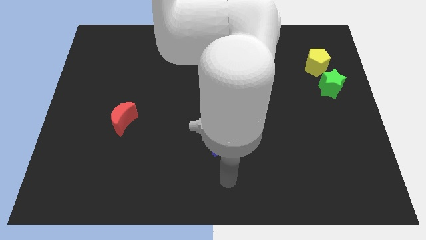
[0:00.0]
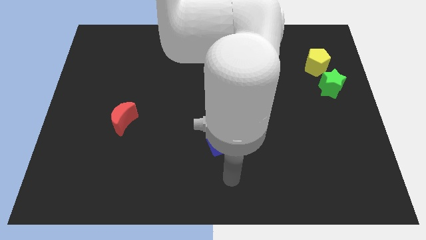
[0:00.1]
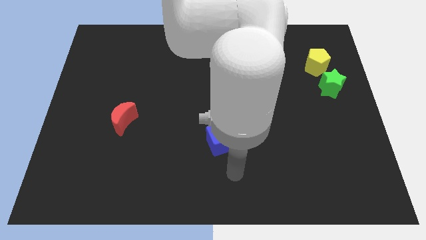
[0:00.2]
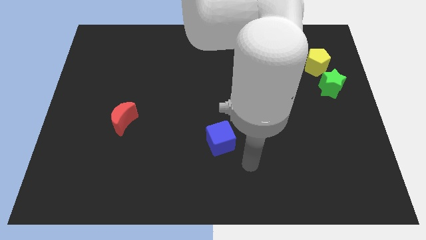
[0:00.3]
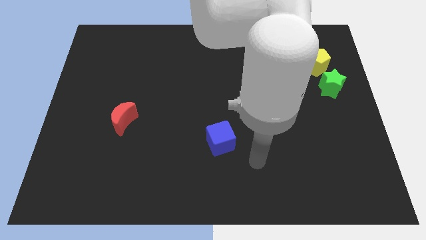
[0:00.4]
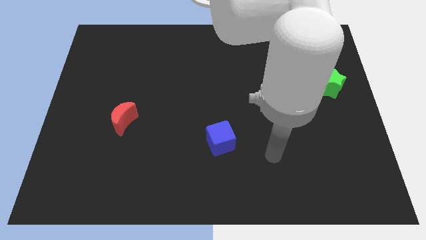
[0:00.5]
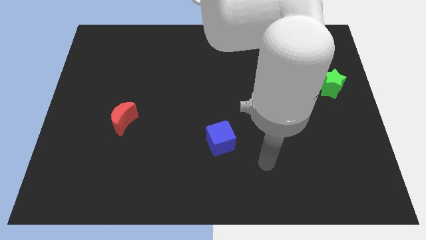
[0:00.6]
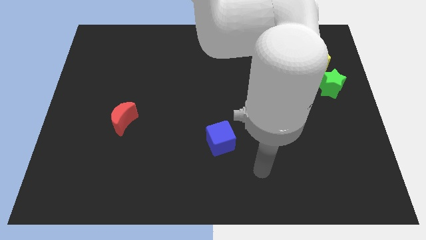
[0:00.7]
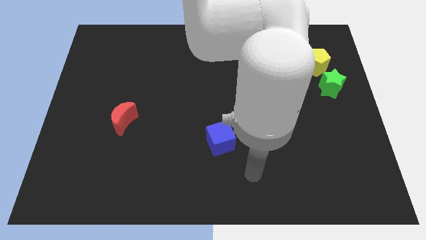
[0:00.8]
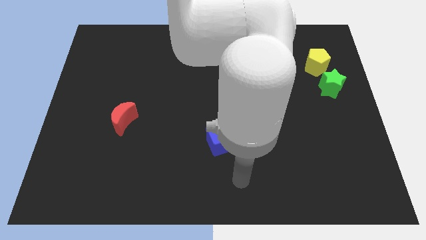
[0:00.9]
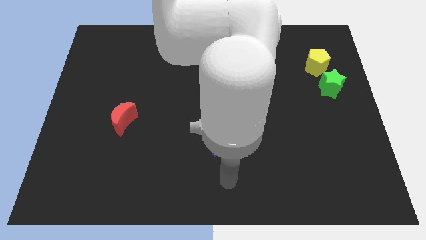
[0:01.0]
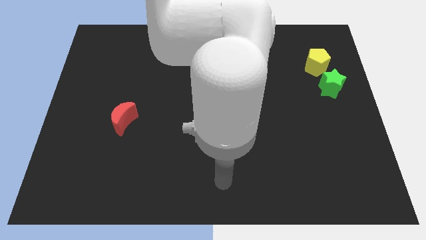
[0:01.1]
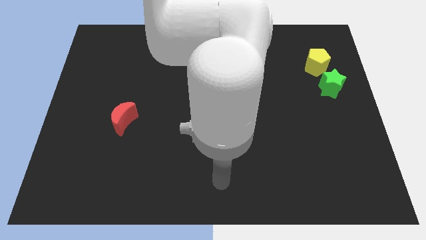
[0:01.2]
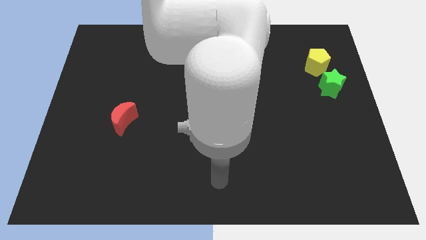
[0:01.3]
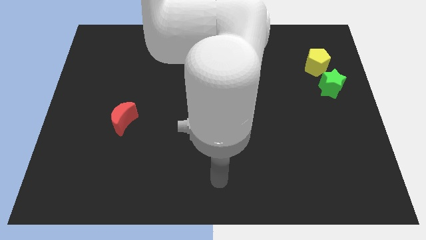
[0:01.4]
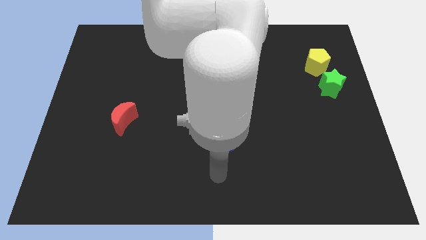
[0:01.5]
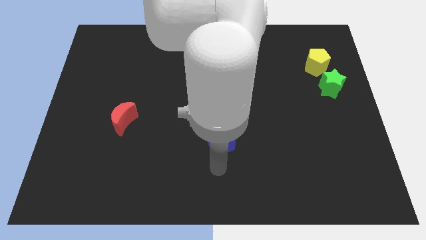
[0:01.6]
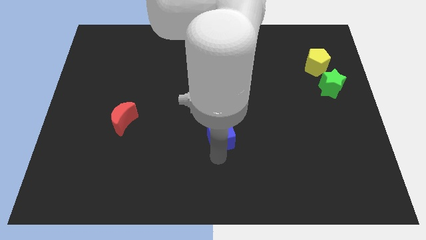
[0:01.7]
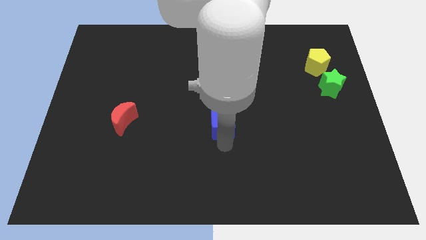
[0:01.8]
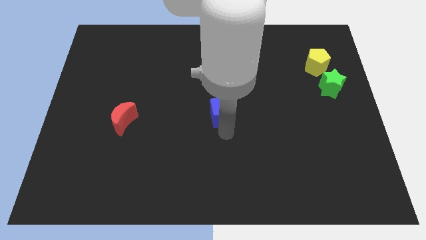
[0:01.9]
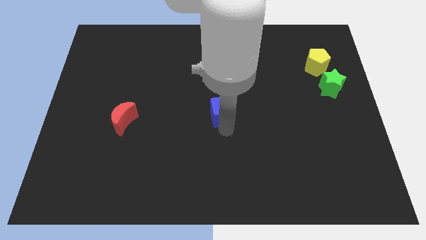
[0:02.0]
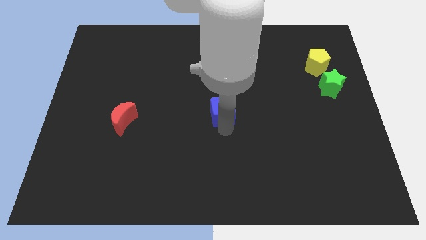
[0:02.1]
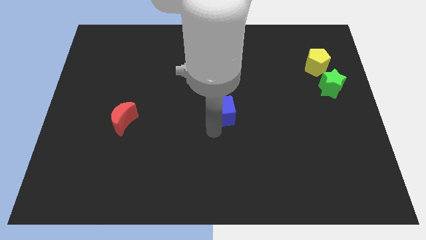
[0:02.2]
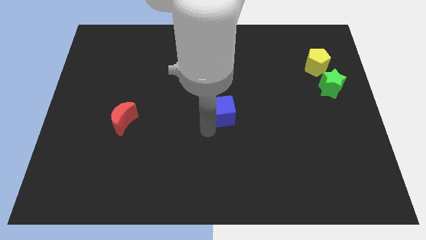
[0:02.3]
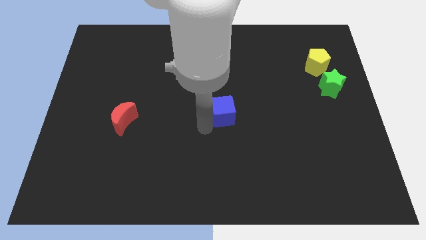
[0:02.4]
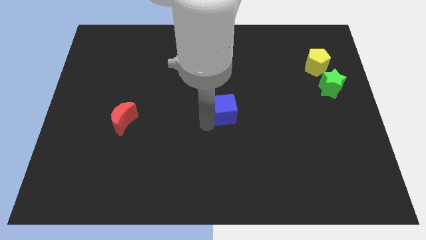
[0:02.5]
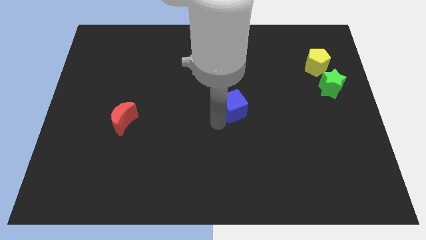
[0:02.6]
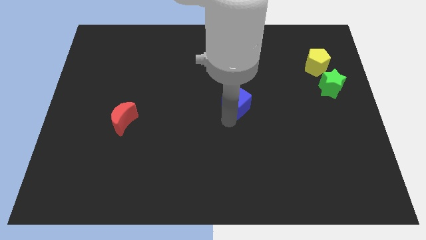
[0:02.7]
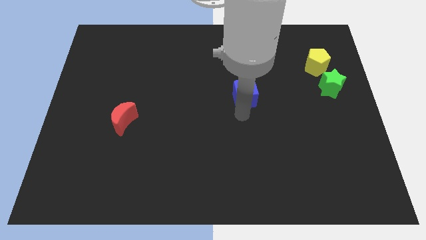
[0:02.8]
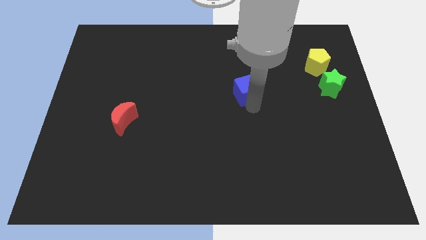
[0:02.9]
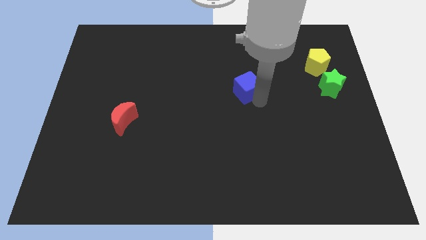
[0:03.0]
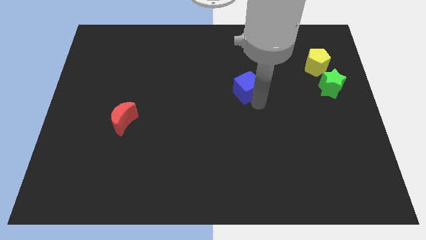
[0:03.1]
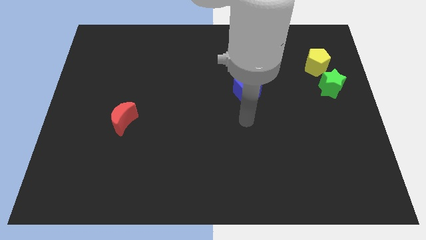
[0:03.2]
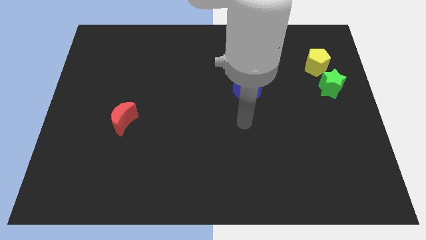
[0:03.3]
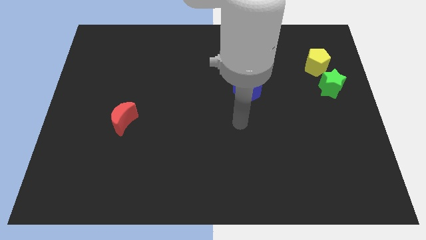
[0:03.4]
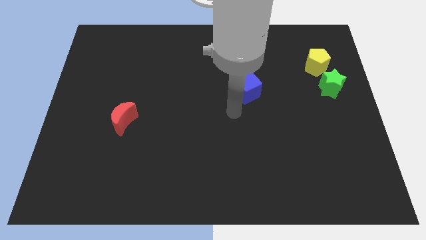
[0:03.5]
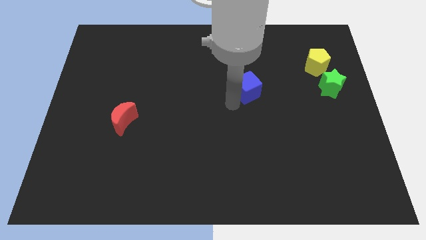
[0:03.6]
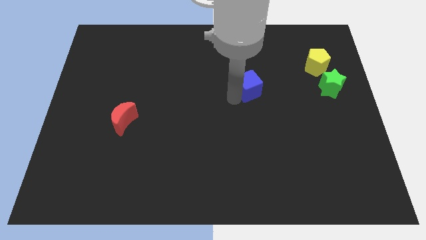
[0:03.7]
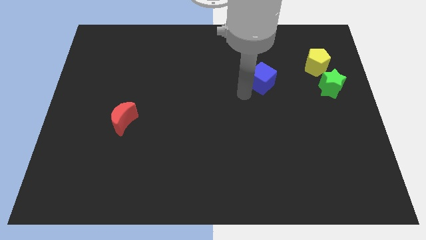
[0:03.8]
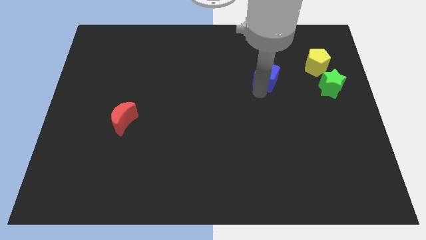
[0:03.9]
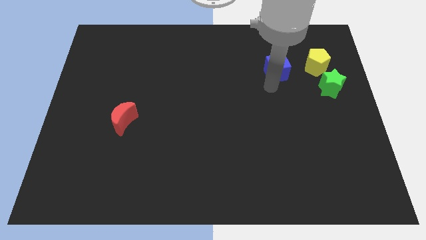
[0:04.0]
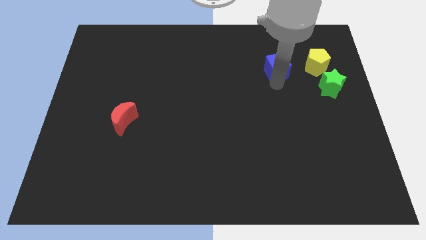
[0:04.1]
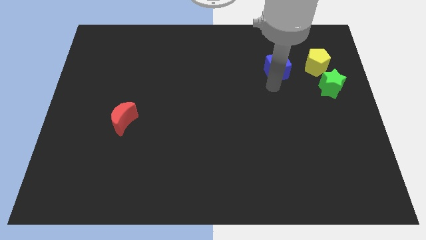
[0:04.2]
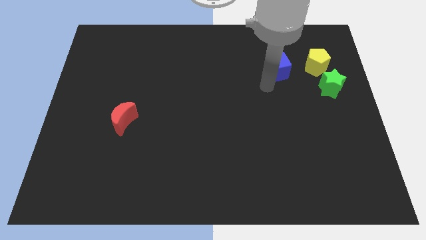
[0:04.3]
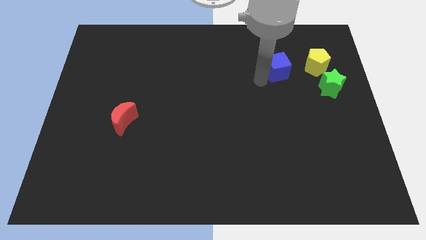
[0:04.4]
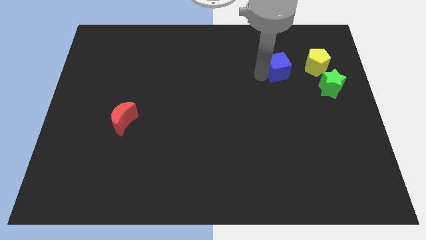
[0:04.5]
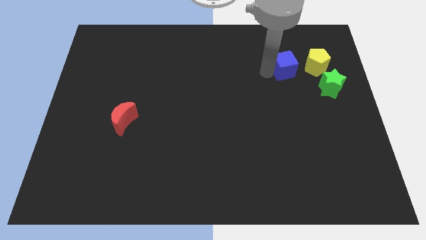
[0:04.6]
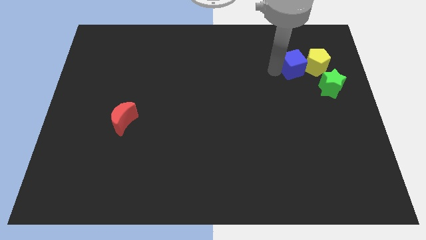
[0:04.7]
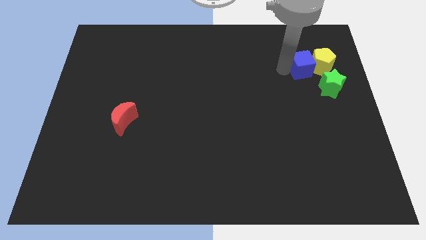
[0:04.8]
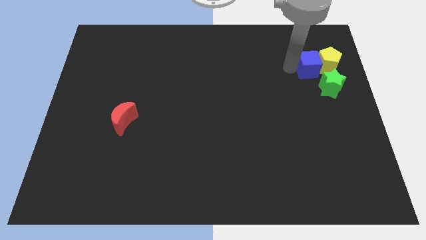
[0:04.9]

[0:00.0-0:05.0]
move the blue block close to the pentagon

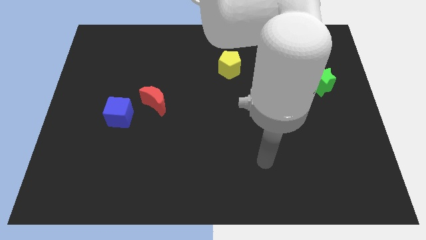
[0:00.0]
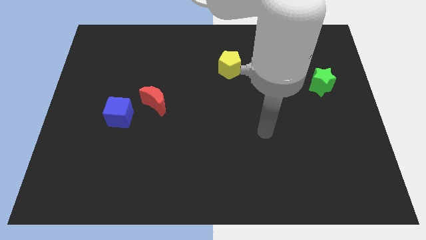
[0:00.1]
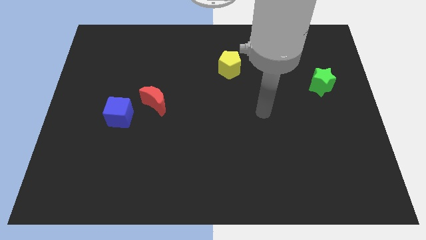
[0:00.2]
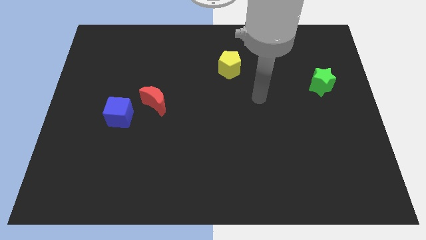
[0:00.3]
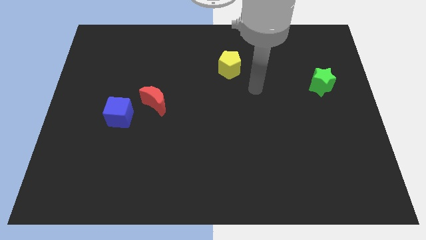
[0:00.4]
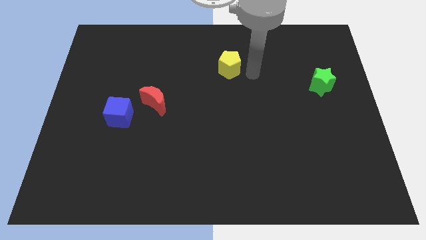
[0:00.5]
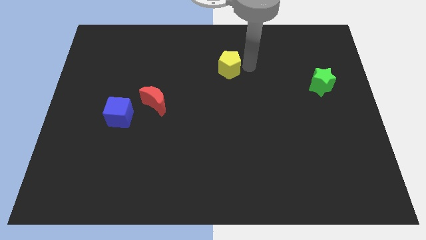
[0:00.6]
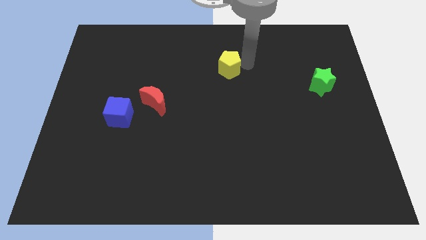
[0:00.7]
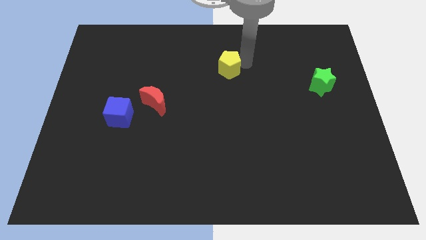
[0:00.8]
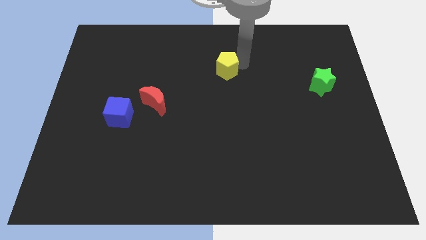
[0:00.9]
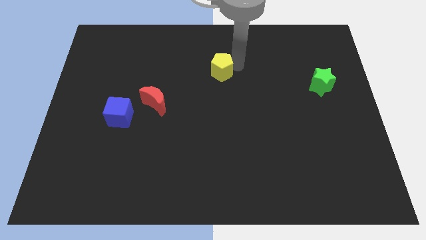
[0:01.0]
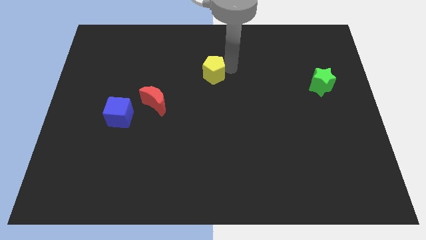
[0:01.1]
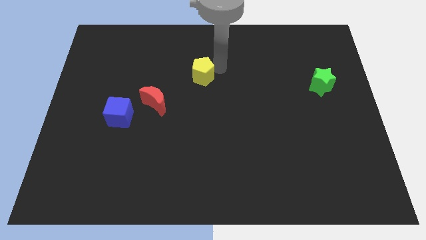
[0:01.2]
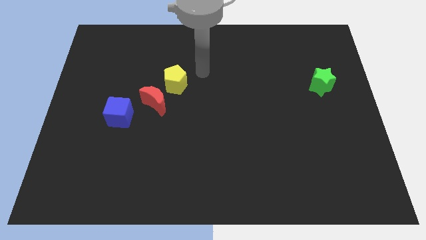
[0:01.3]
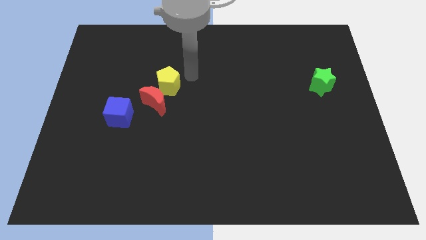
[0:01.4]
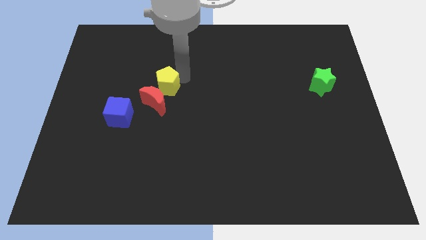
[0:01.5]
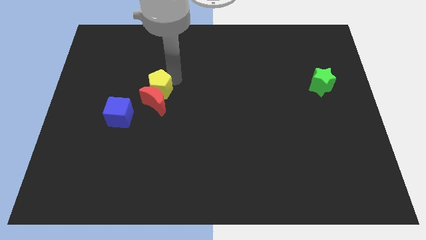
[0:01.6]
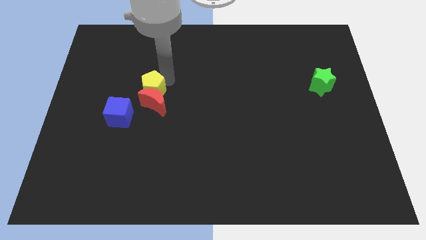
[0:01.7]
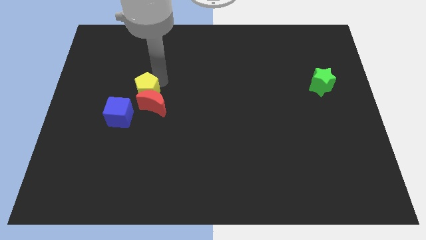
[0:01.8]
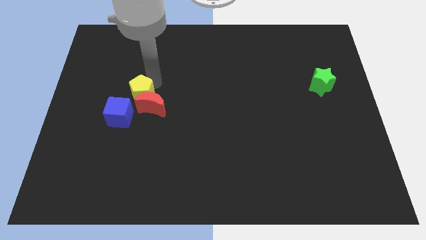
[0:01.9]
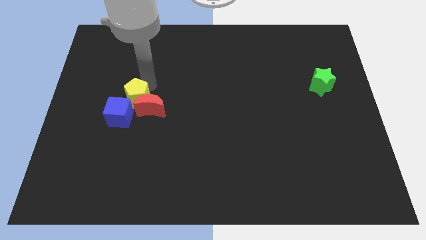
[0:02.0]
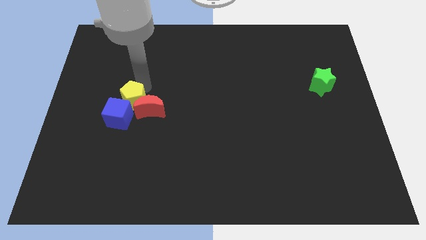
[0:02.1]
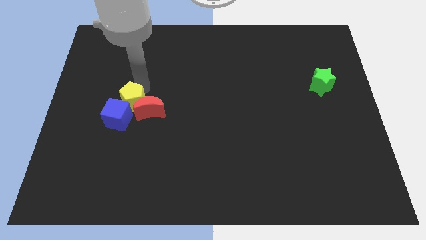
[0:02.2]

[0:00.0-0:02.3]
slide the pentagon towards the cube

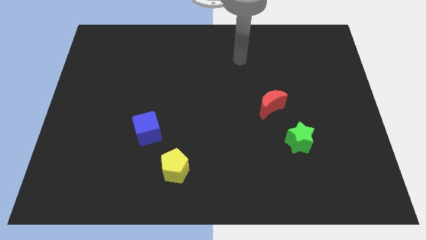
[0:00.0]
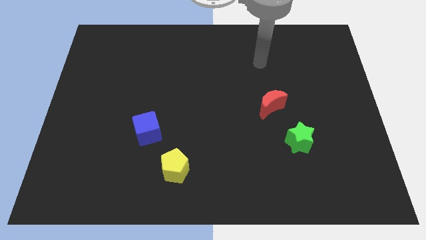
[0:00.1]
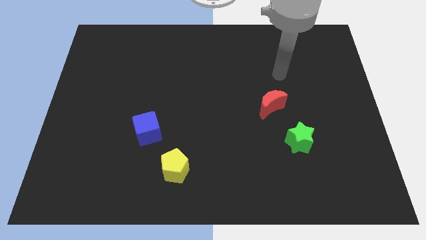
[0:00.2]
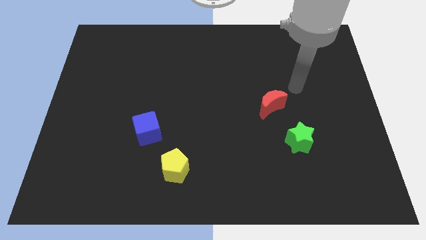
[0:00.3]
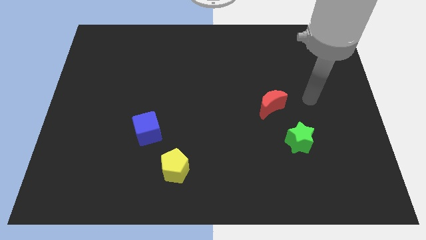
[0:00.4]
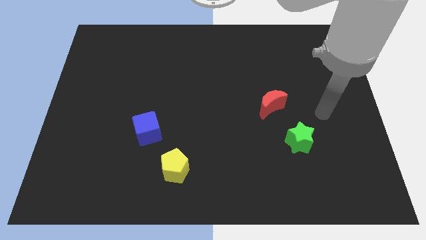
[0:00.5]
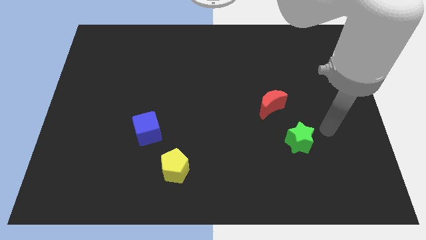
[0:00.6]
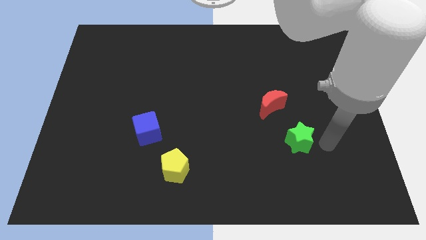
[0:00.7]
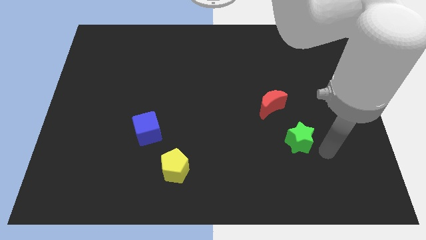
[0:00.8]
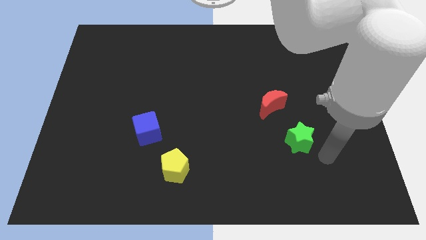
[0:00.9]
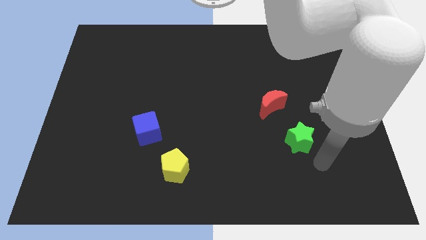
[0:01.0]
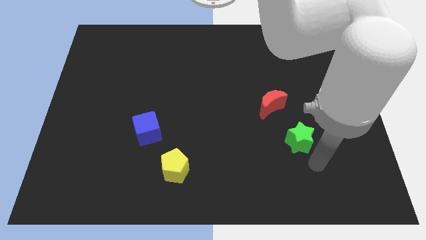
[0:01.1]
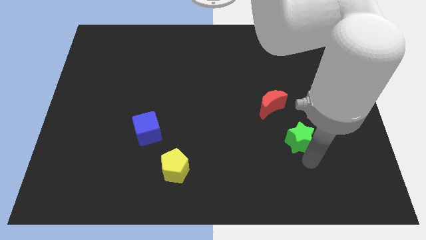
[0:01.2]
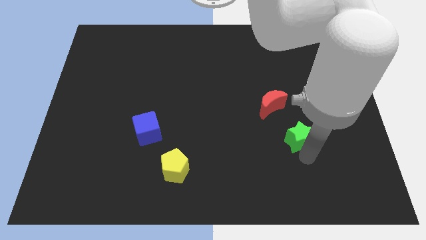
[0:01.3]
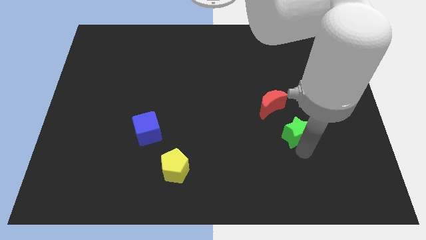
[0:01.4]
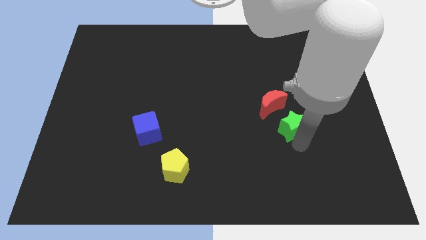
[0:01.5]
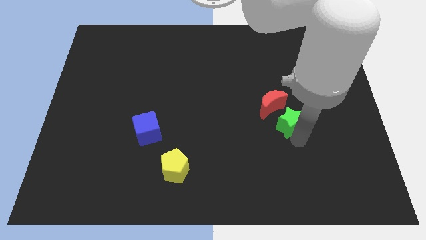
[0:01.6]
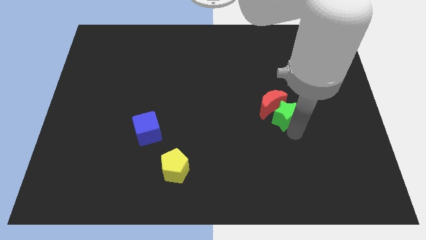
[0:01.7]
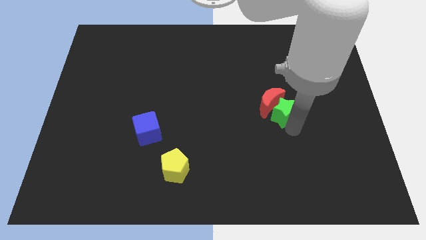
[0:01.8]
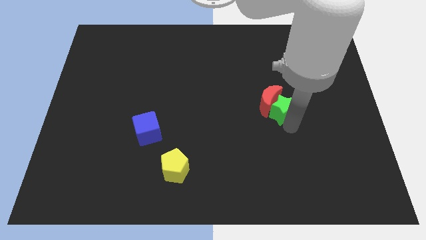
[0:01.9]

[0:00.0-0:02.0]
slide the green star next to the moon
